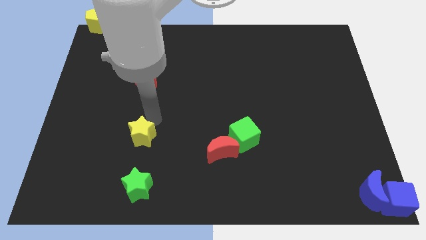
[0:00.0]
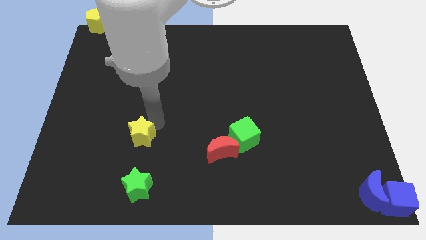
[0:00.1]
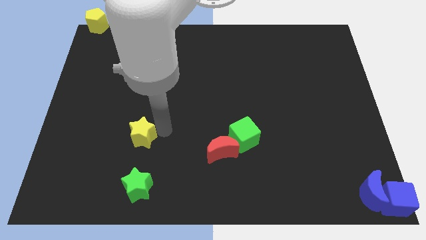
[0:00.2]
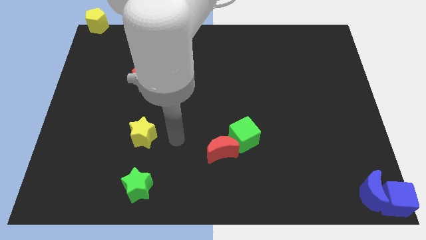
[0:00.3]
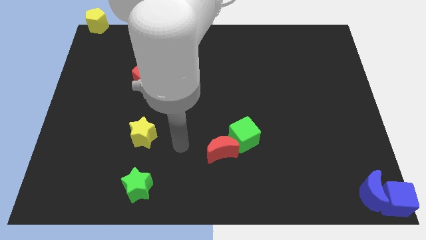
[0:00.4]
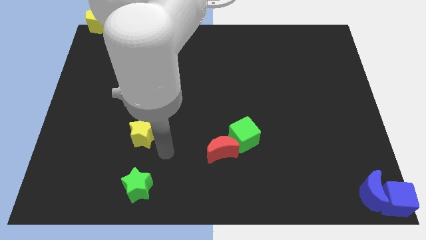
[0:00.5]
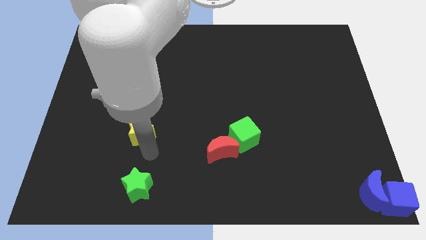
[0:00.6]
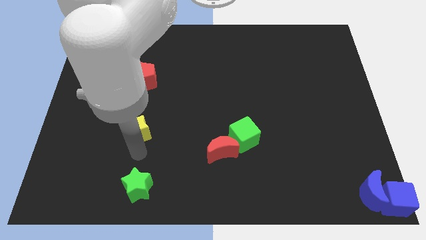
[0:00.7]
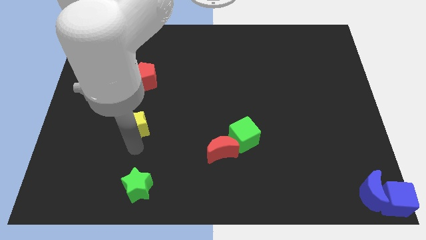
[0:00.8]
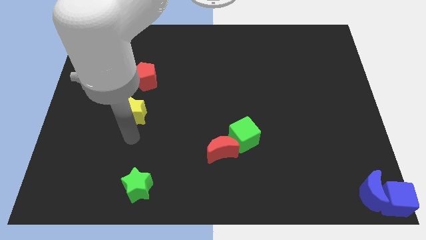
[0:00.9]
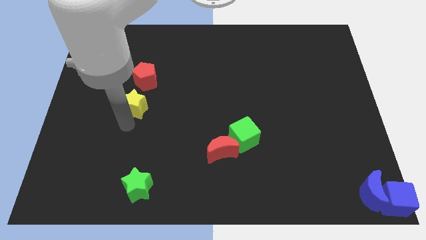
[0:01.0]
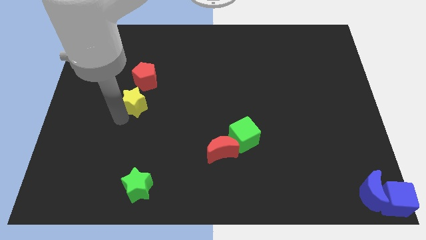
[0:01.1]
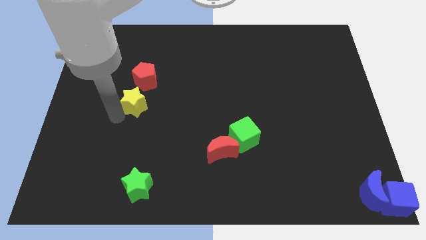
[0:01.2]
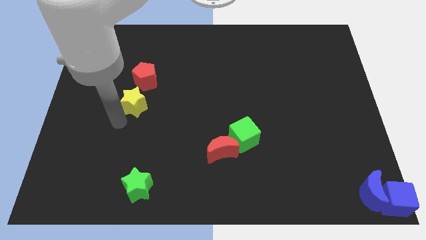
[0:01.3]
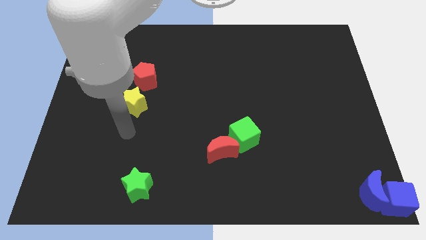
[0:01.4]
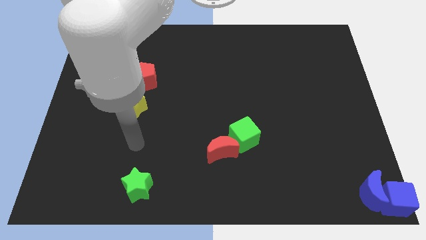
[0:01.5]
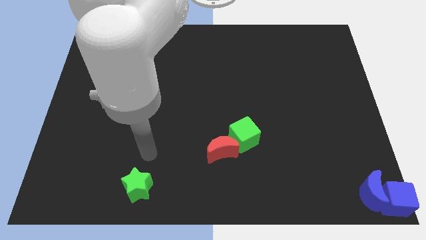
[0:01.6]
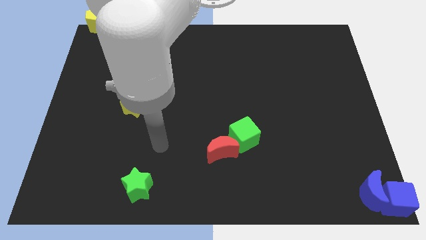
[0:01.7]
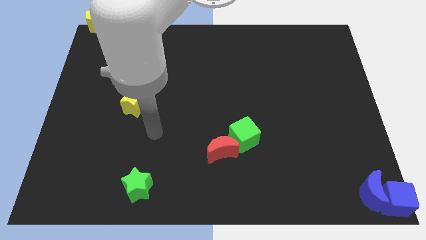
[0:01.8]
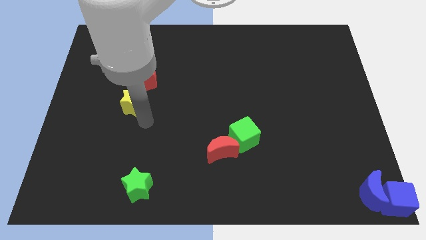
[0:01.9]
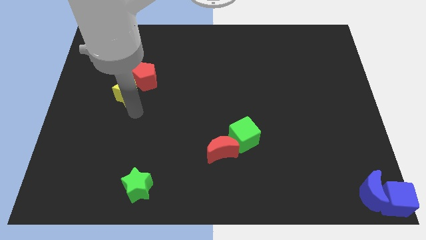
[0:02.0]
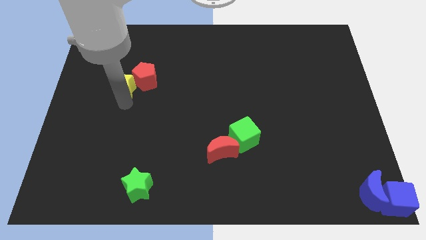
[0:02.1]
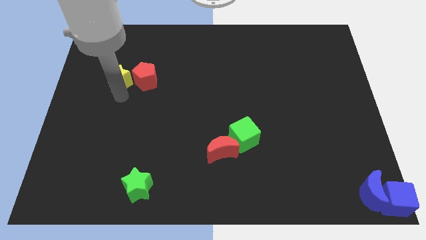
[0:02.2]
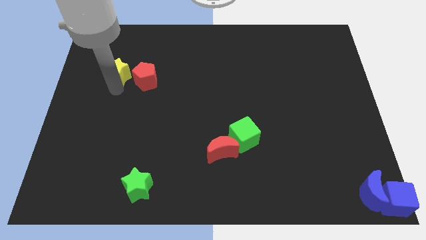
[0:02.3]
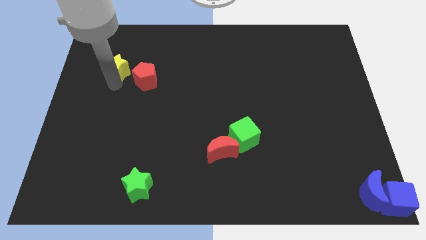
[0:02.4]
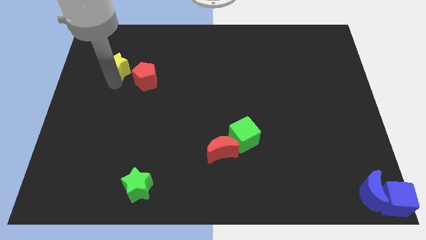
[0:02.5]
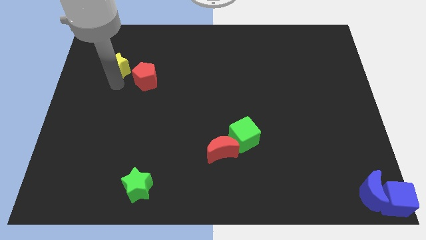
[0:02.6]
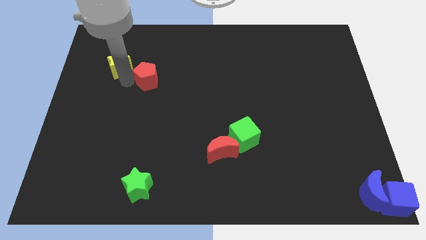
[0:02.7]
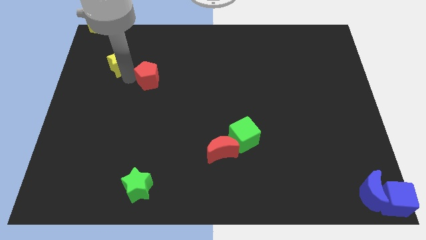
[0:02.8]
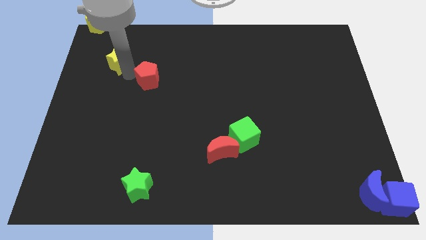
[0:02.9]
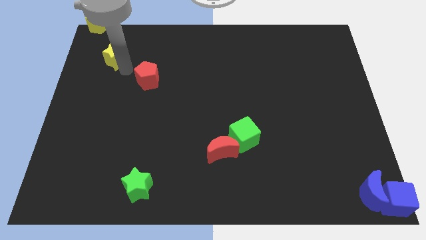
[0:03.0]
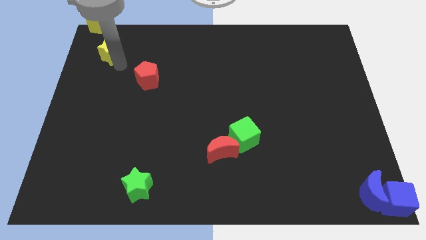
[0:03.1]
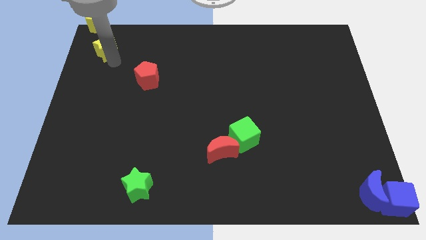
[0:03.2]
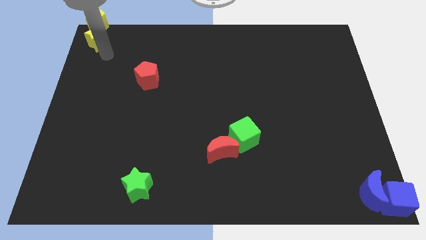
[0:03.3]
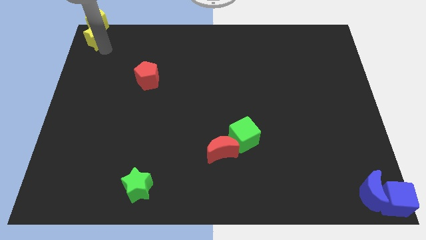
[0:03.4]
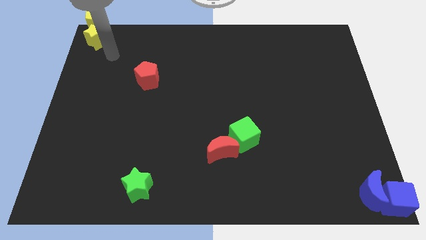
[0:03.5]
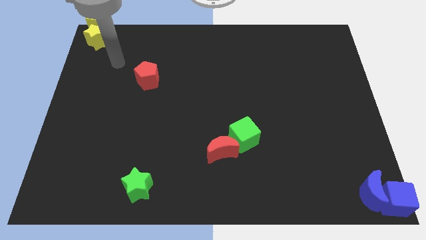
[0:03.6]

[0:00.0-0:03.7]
move the yellow star to the bottom of the yellow pentagon

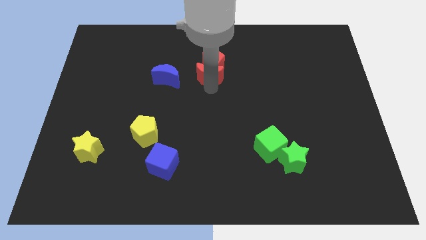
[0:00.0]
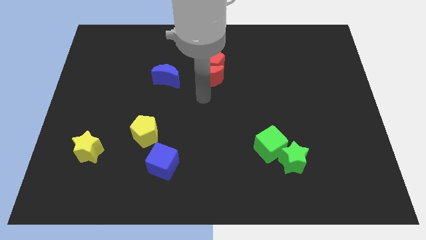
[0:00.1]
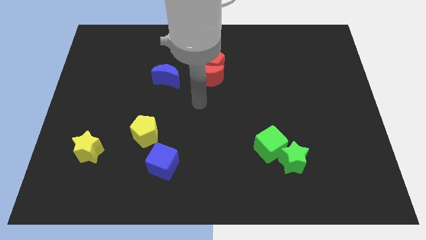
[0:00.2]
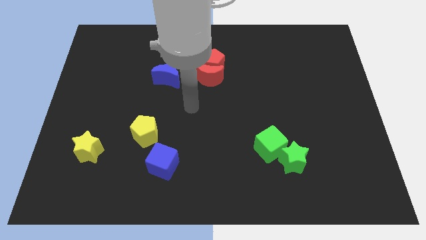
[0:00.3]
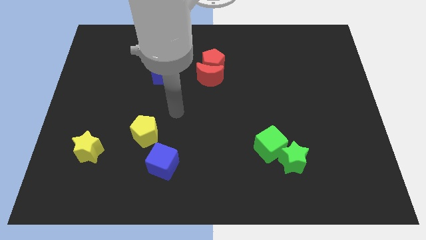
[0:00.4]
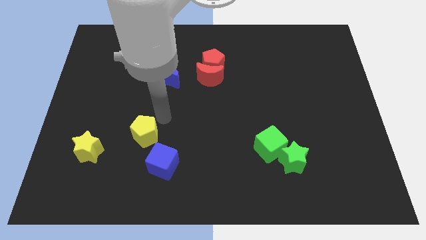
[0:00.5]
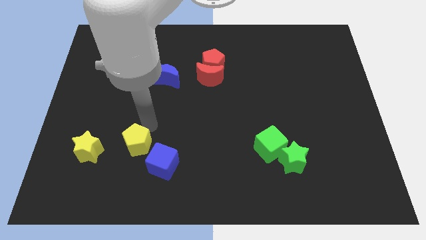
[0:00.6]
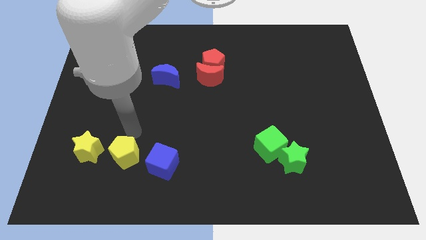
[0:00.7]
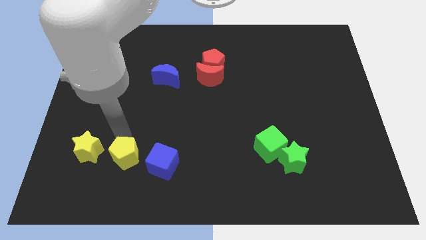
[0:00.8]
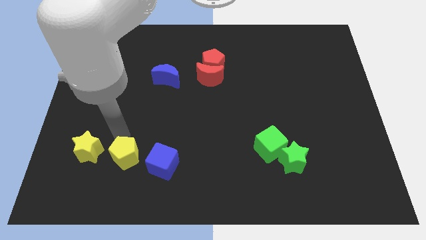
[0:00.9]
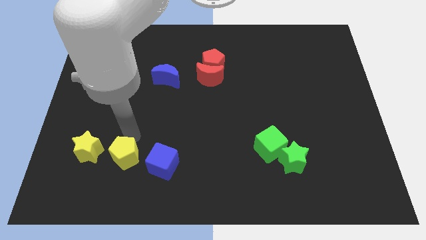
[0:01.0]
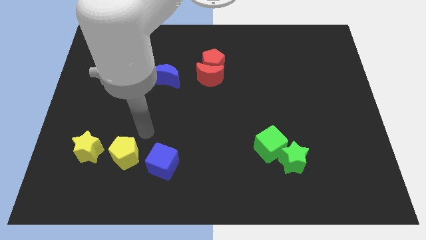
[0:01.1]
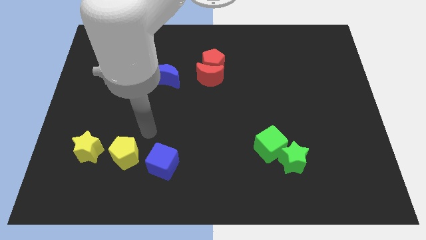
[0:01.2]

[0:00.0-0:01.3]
place the yellow pentagon at the left of blue cube

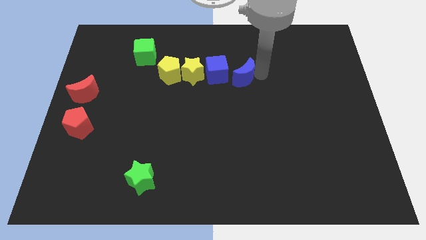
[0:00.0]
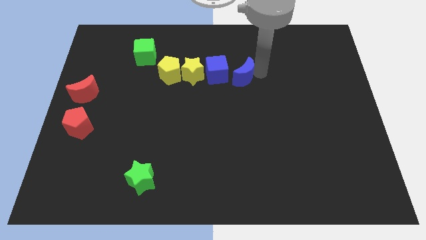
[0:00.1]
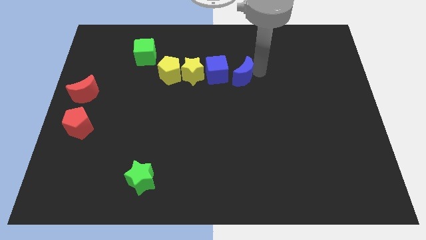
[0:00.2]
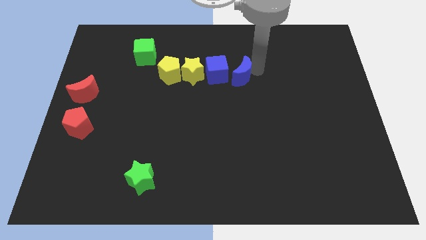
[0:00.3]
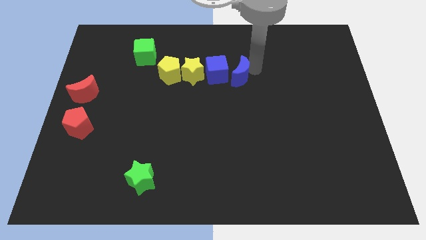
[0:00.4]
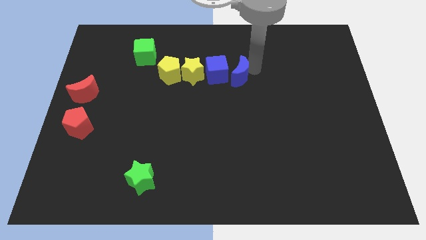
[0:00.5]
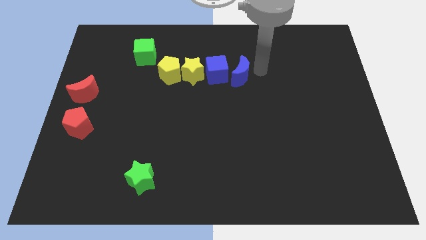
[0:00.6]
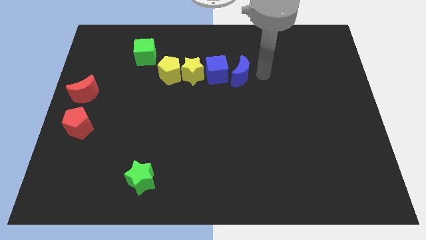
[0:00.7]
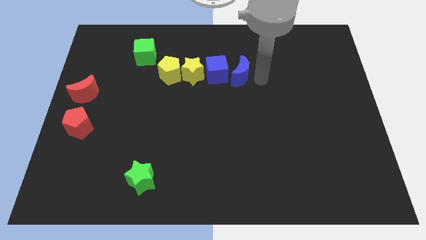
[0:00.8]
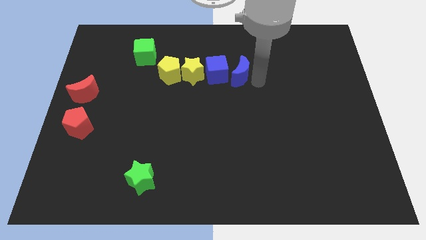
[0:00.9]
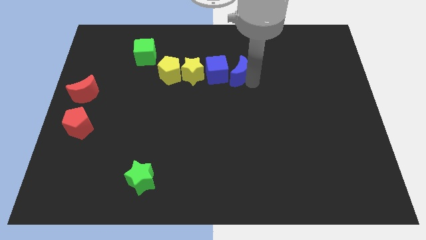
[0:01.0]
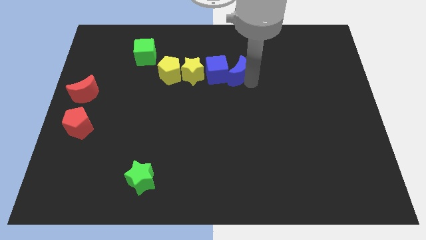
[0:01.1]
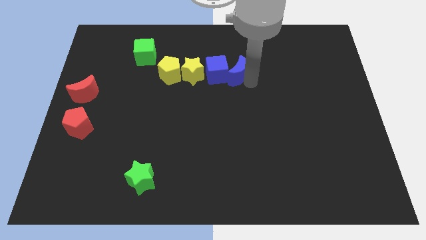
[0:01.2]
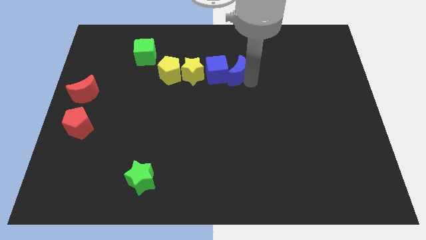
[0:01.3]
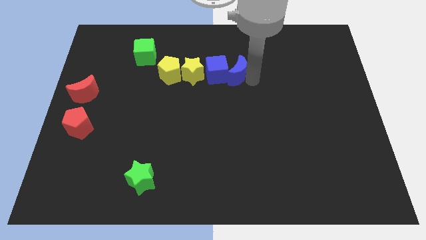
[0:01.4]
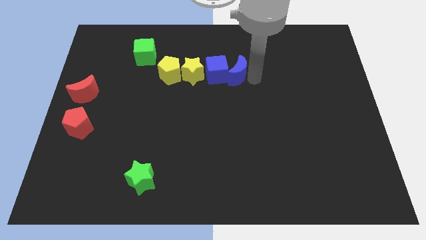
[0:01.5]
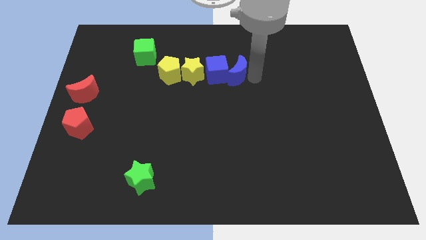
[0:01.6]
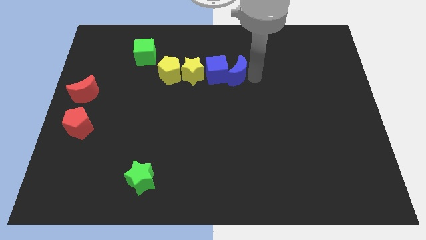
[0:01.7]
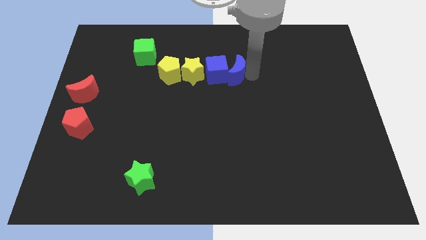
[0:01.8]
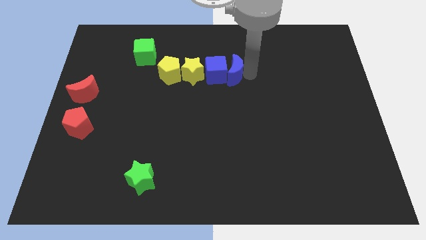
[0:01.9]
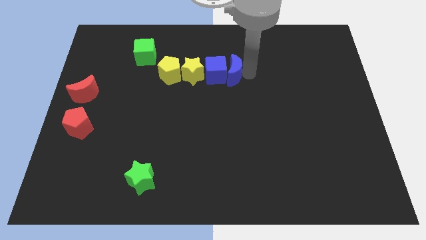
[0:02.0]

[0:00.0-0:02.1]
slide the blue crescent into the blue cube

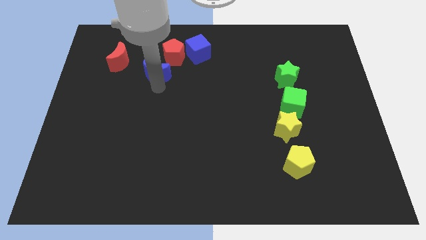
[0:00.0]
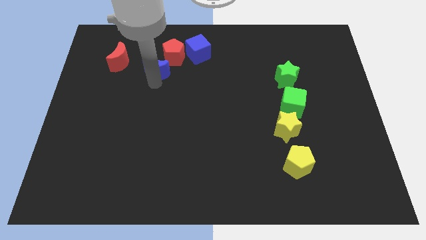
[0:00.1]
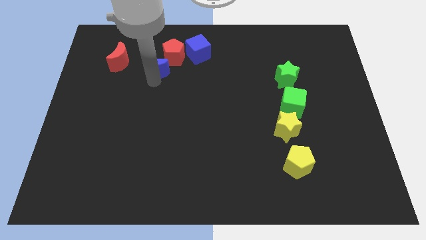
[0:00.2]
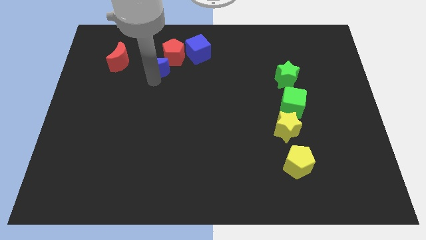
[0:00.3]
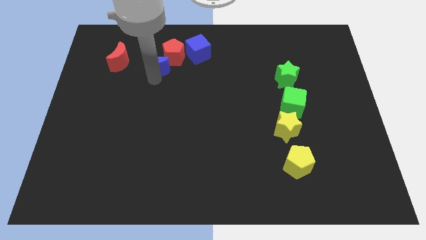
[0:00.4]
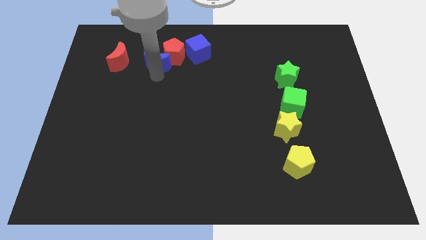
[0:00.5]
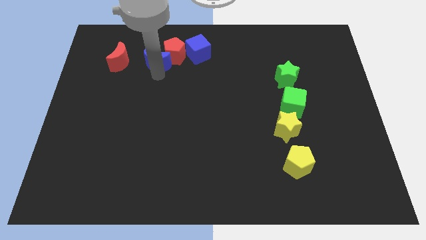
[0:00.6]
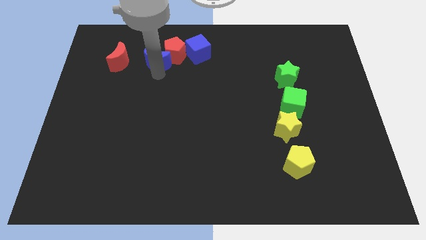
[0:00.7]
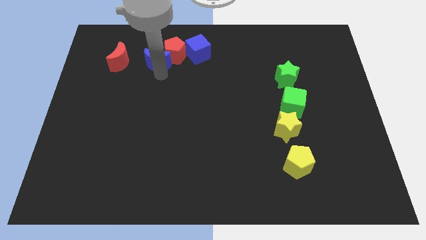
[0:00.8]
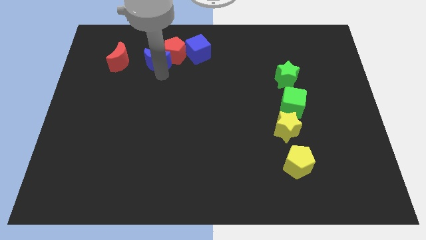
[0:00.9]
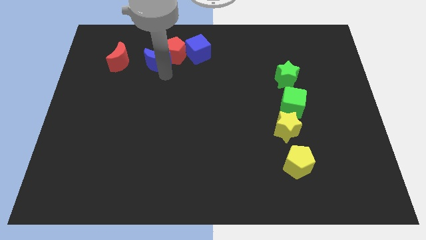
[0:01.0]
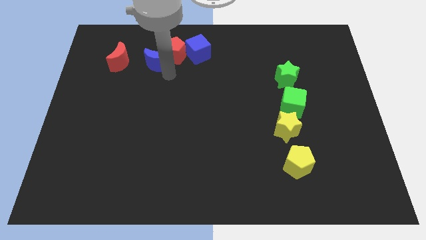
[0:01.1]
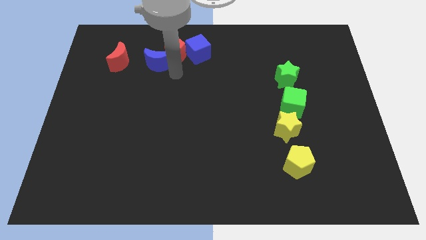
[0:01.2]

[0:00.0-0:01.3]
move the blue moon into the red pentagon

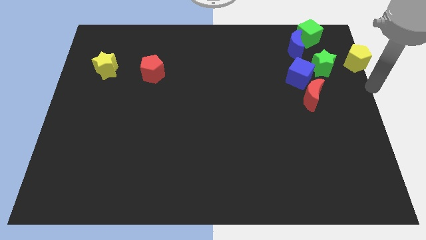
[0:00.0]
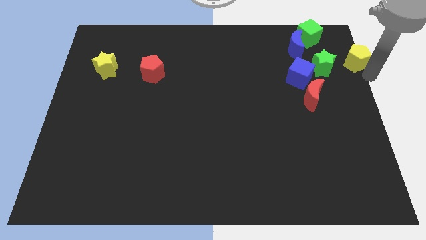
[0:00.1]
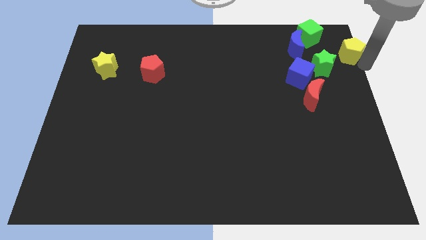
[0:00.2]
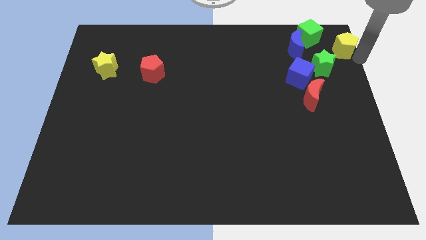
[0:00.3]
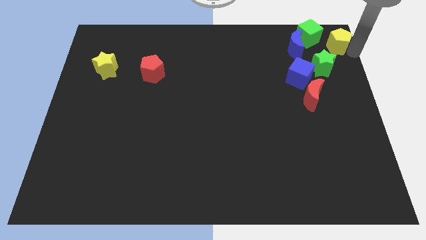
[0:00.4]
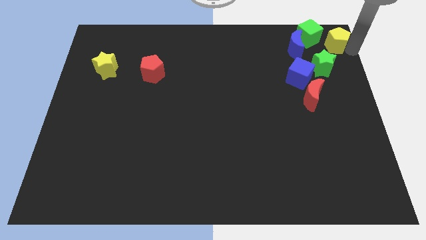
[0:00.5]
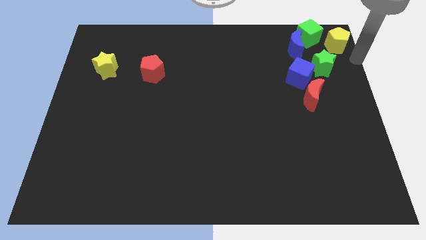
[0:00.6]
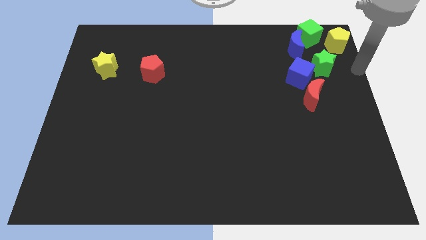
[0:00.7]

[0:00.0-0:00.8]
move the yellow pentagon to the right of the green cube
